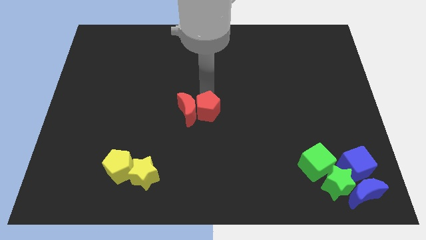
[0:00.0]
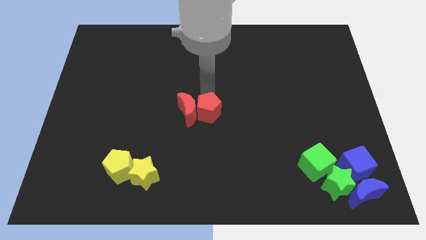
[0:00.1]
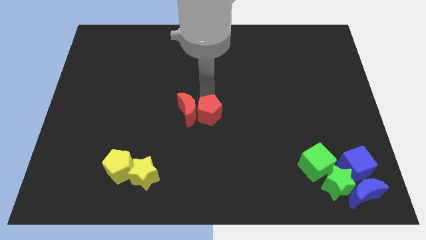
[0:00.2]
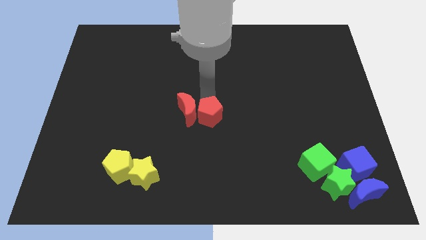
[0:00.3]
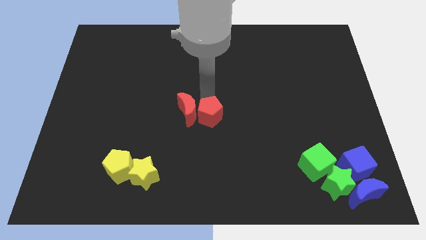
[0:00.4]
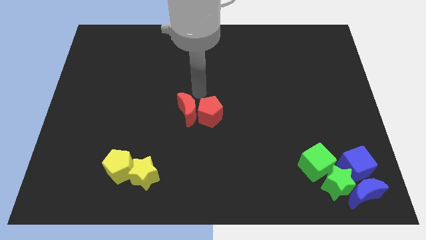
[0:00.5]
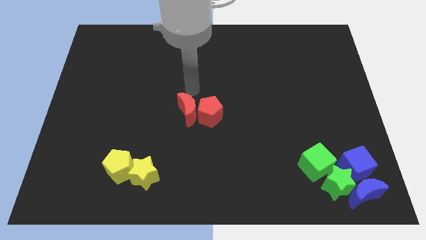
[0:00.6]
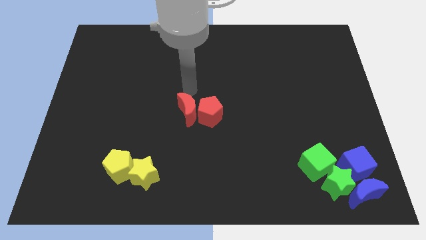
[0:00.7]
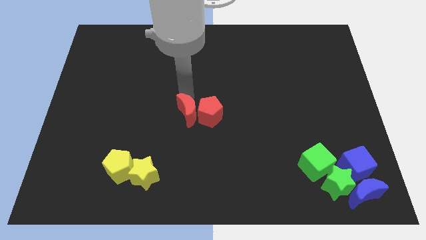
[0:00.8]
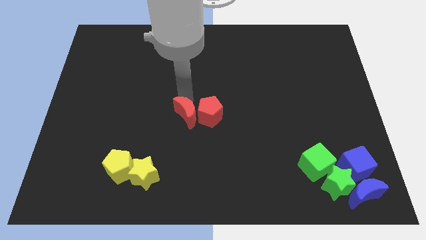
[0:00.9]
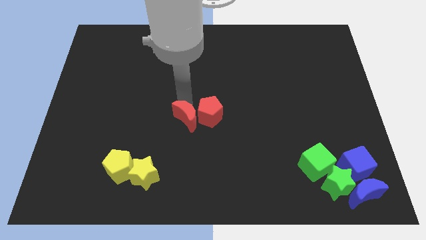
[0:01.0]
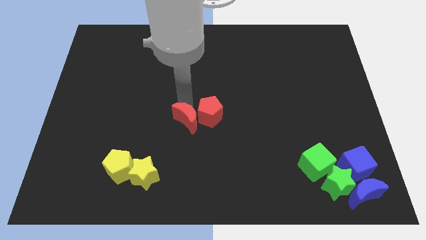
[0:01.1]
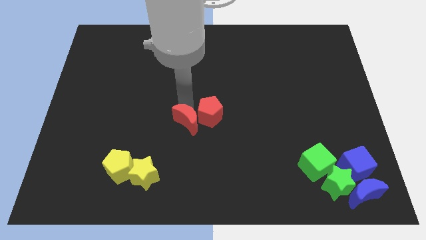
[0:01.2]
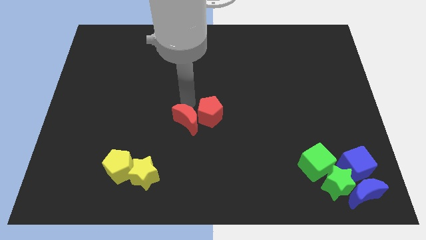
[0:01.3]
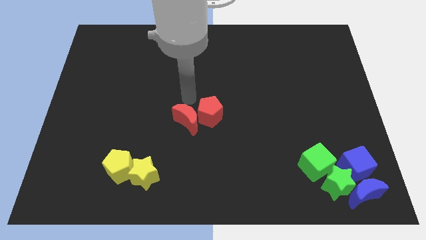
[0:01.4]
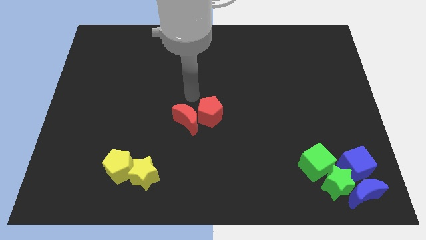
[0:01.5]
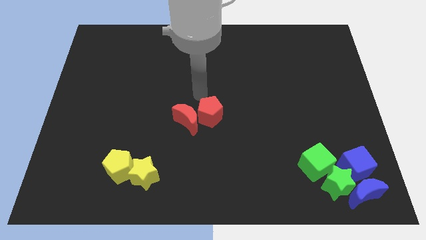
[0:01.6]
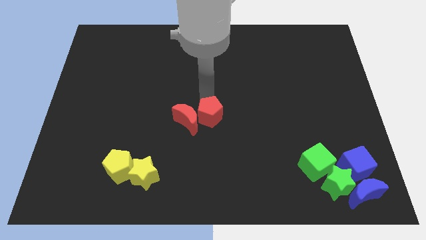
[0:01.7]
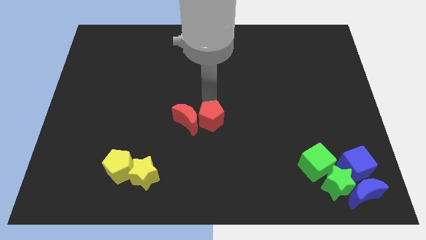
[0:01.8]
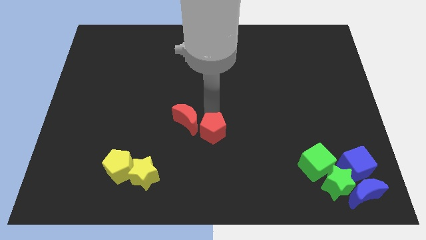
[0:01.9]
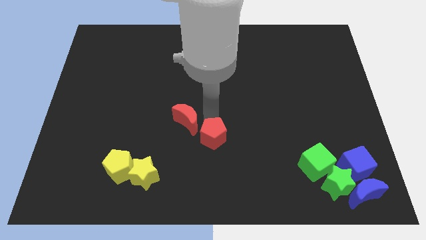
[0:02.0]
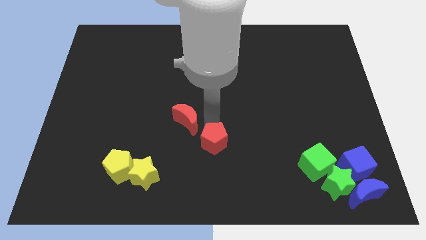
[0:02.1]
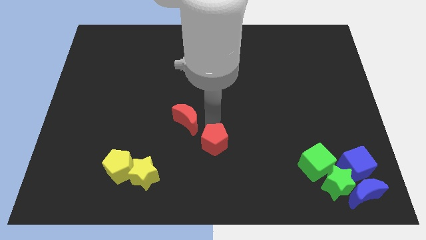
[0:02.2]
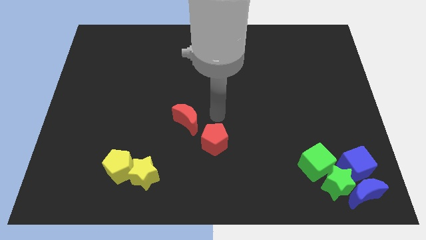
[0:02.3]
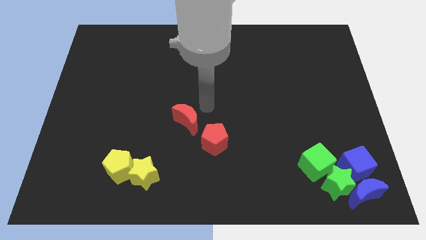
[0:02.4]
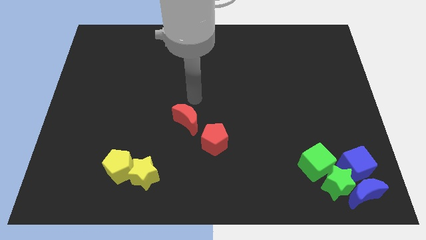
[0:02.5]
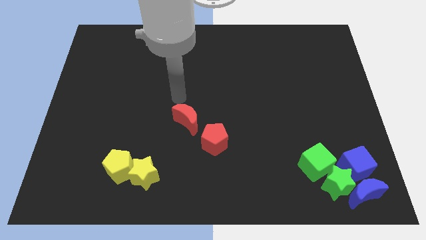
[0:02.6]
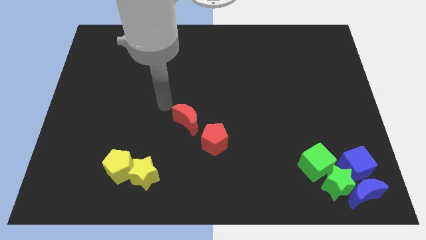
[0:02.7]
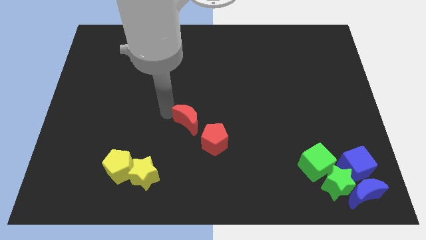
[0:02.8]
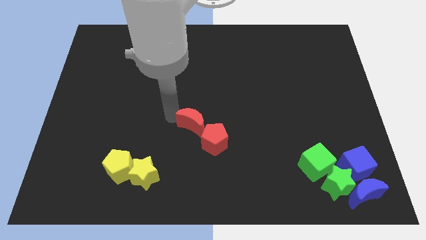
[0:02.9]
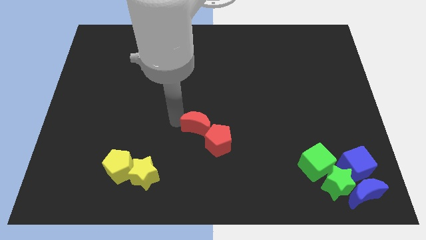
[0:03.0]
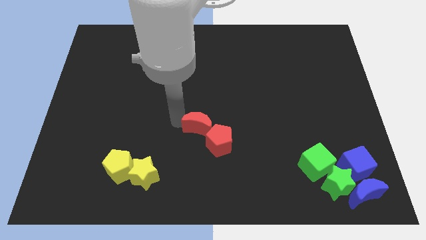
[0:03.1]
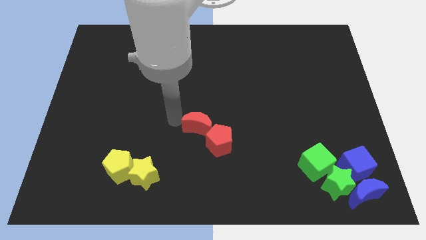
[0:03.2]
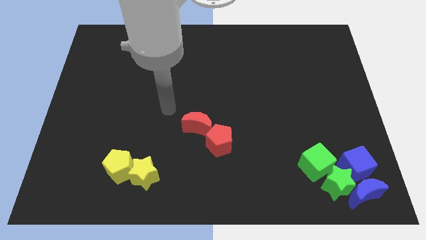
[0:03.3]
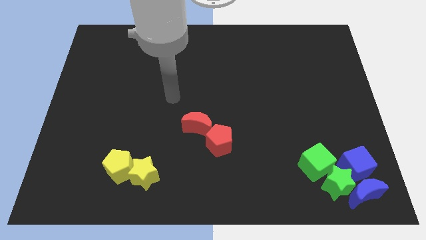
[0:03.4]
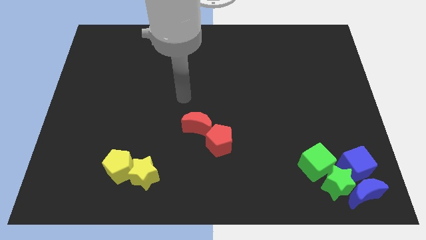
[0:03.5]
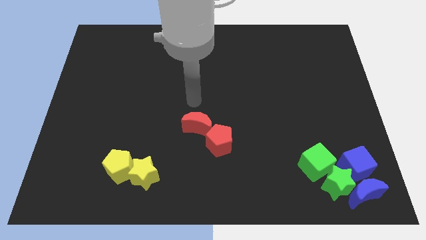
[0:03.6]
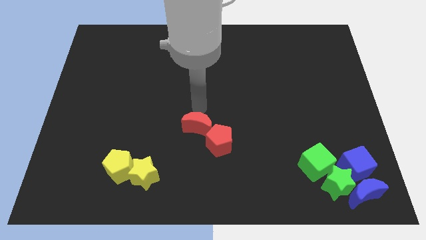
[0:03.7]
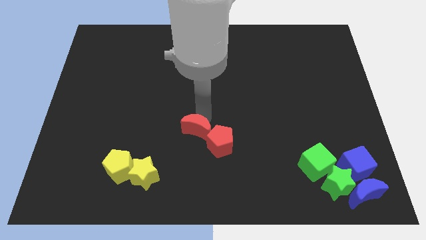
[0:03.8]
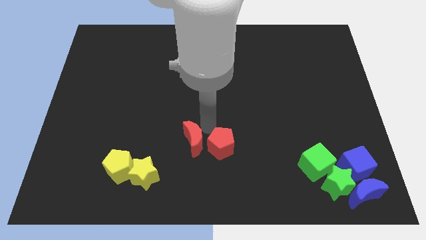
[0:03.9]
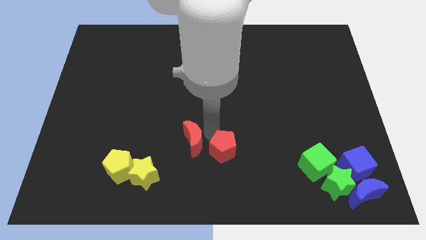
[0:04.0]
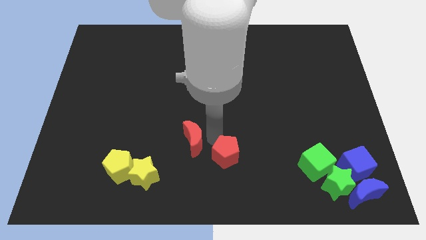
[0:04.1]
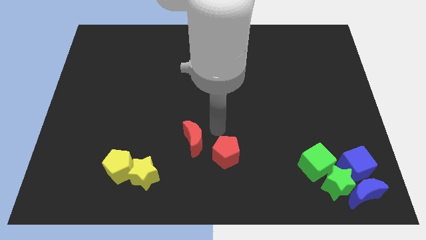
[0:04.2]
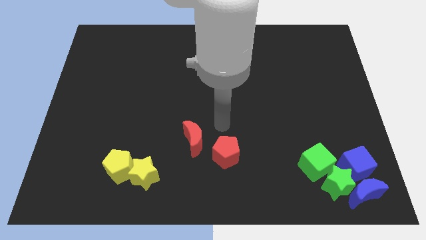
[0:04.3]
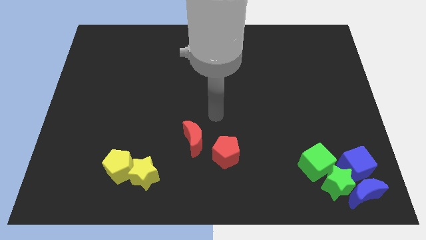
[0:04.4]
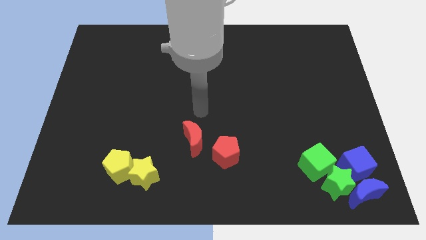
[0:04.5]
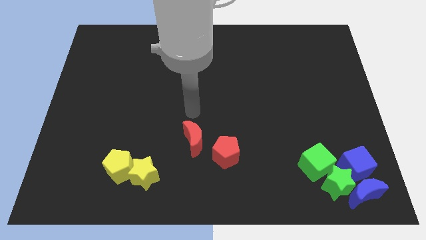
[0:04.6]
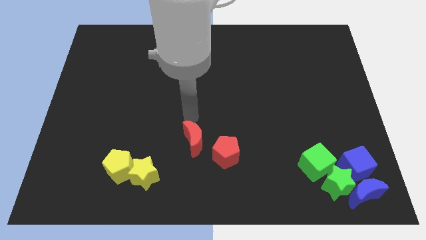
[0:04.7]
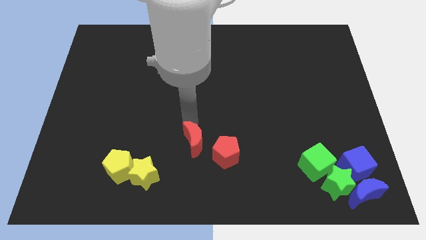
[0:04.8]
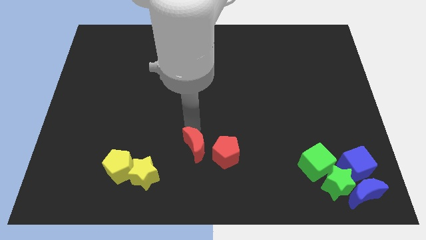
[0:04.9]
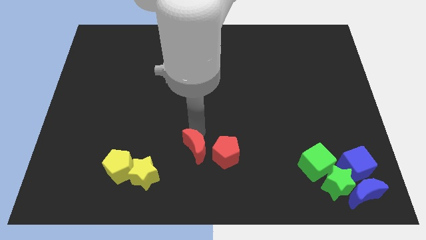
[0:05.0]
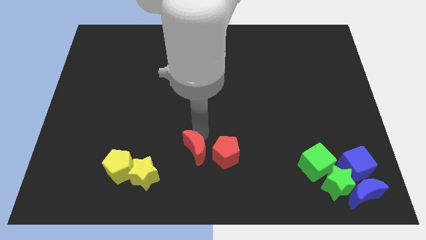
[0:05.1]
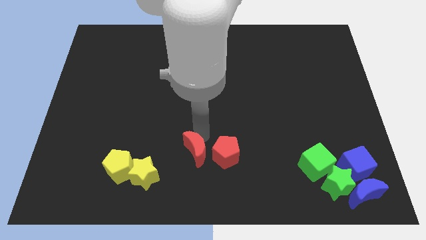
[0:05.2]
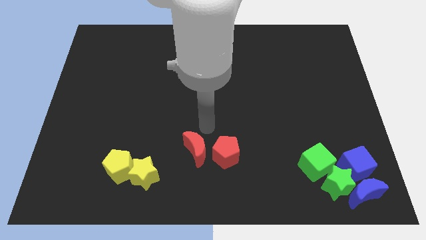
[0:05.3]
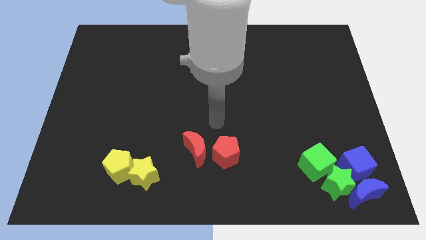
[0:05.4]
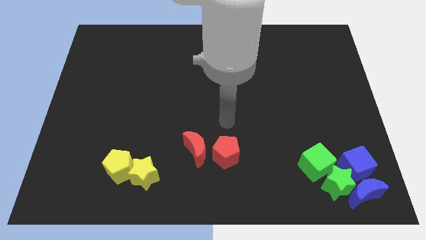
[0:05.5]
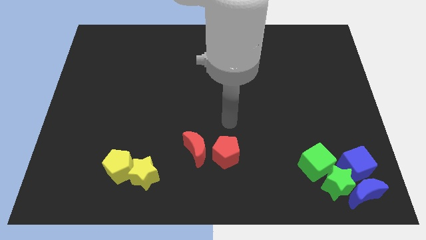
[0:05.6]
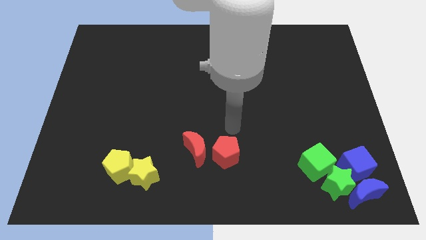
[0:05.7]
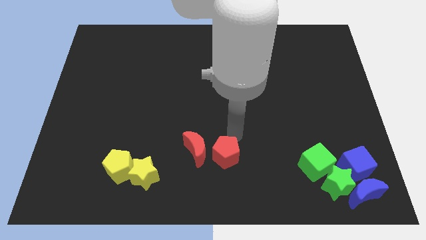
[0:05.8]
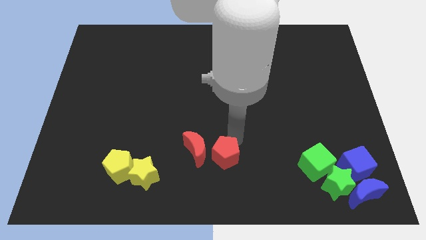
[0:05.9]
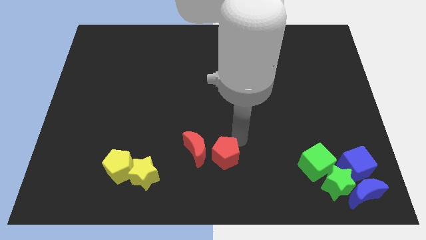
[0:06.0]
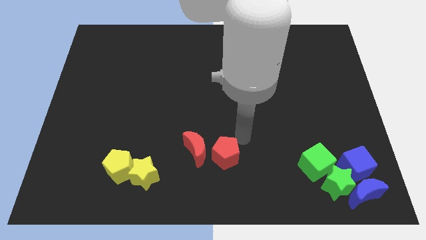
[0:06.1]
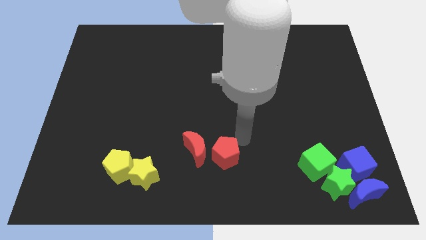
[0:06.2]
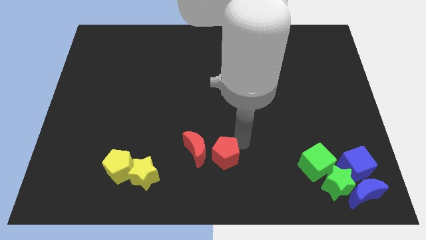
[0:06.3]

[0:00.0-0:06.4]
push the red blocks slightly to the bottom side of the board

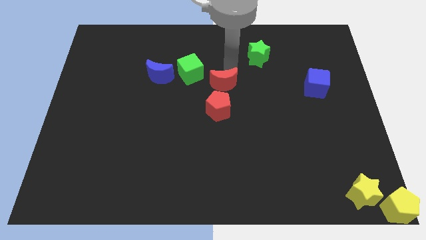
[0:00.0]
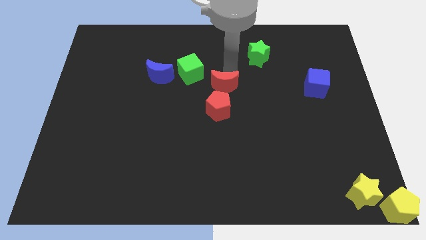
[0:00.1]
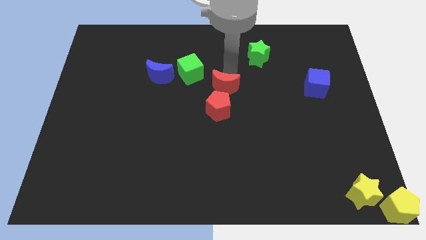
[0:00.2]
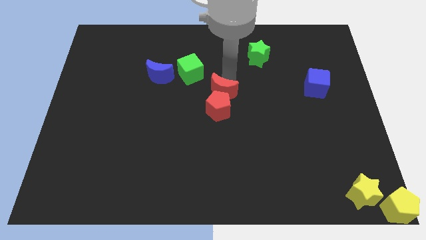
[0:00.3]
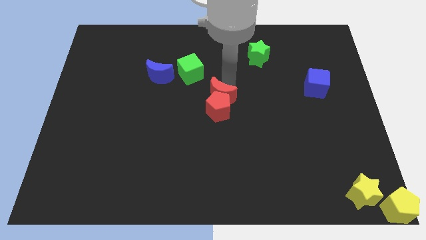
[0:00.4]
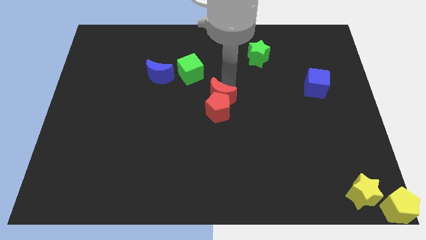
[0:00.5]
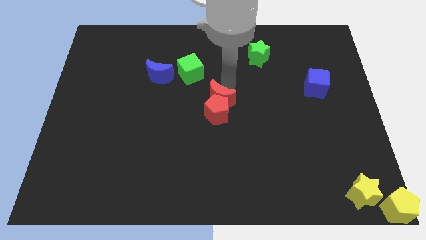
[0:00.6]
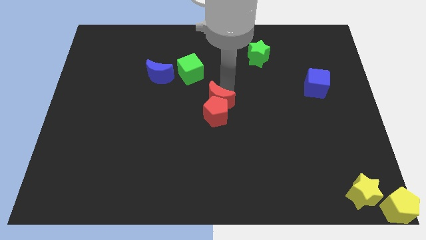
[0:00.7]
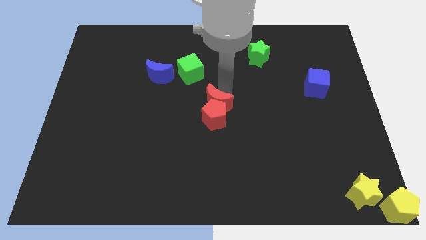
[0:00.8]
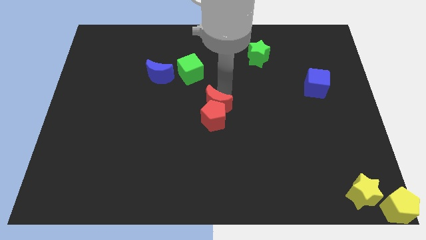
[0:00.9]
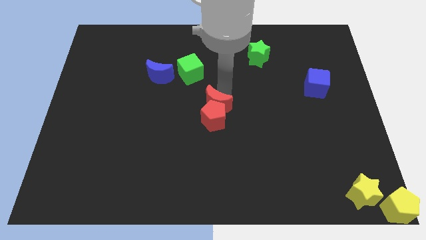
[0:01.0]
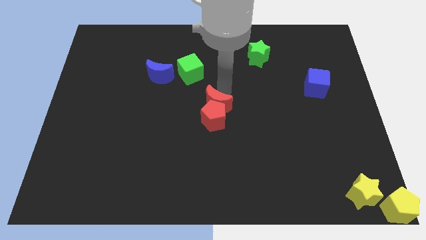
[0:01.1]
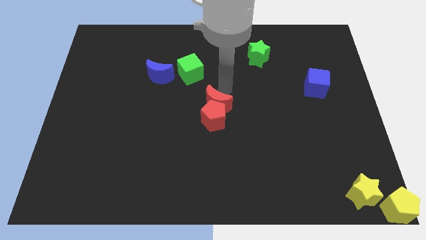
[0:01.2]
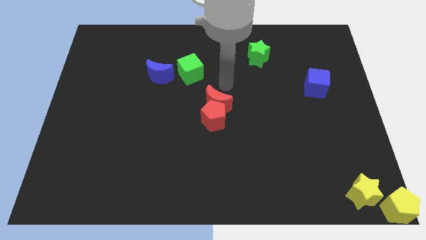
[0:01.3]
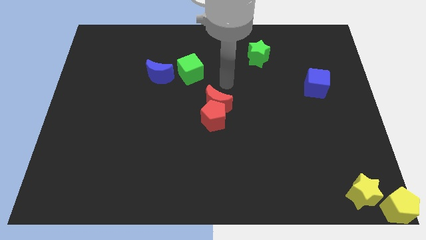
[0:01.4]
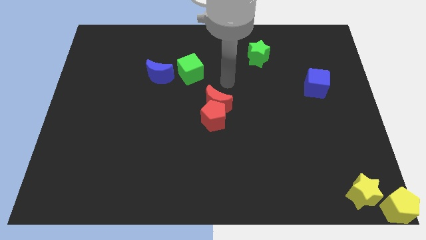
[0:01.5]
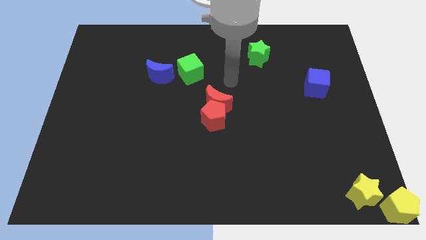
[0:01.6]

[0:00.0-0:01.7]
push the red crescent into the red pentagon

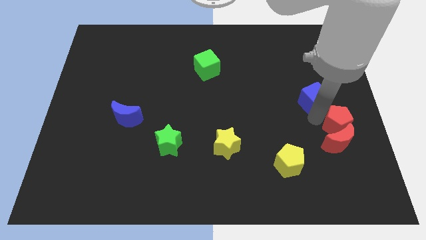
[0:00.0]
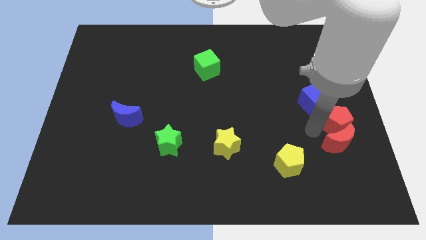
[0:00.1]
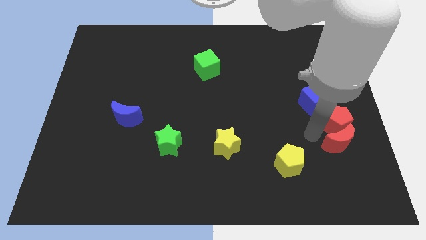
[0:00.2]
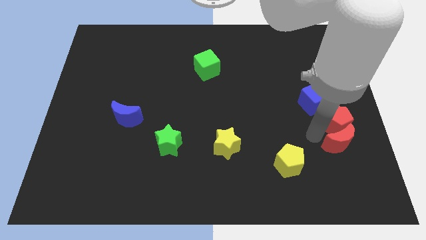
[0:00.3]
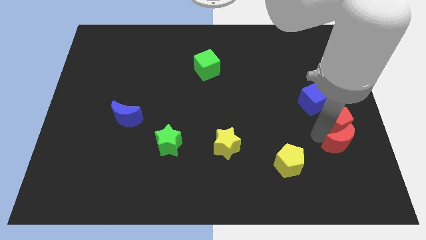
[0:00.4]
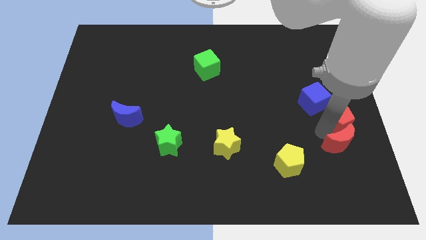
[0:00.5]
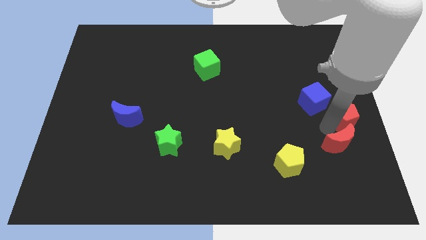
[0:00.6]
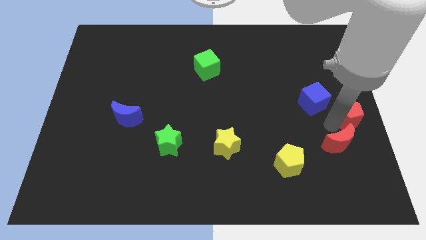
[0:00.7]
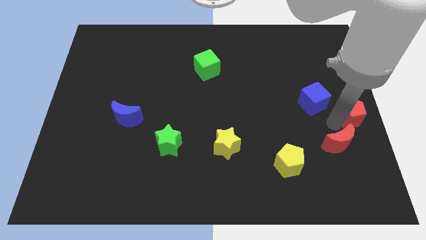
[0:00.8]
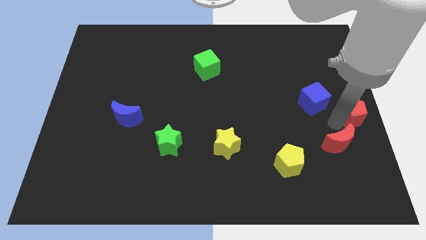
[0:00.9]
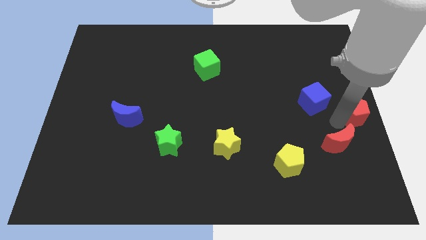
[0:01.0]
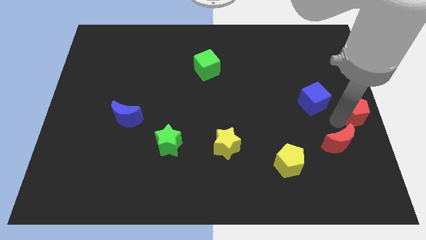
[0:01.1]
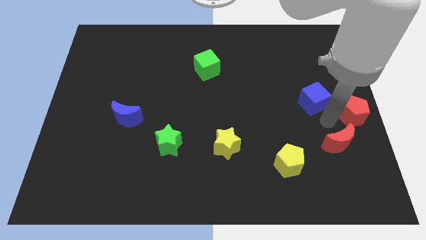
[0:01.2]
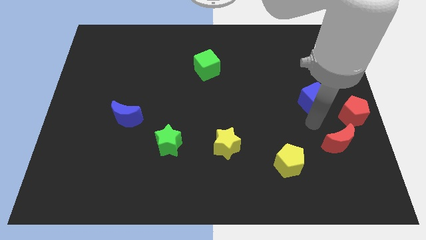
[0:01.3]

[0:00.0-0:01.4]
separate red pentagon from the red moon
